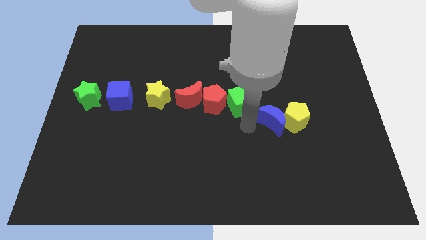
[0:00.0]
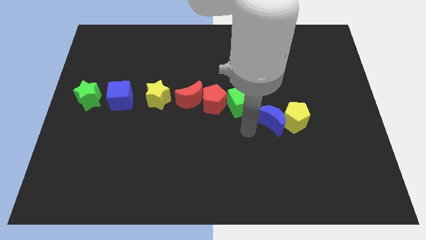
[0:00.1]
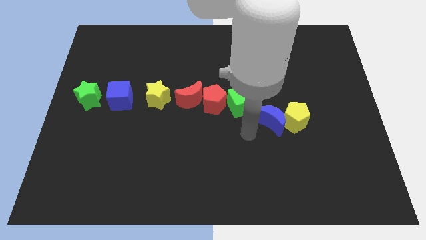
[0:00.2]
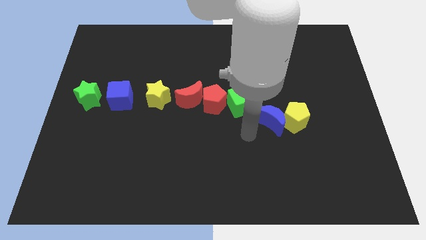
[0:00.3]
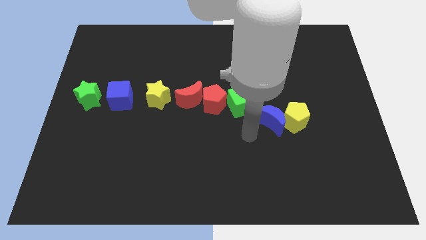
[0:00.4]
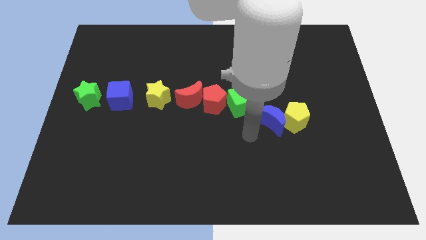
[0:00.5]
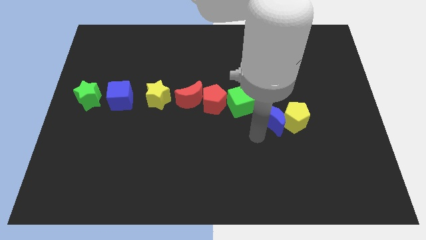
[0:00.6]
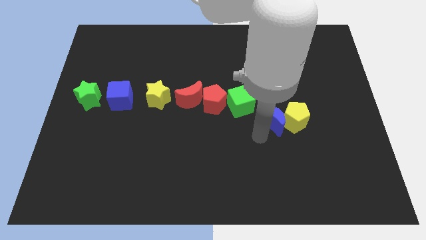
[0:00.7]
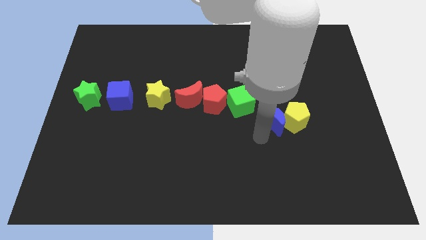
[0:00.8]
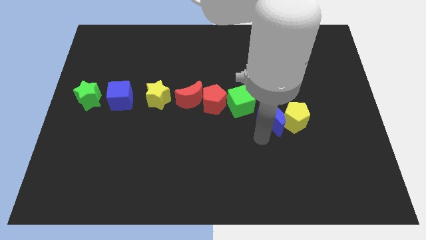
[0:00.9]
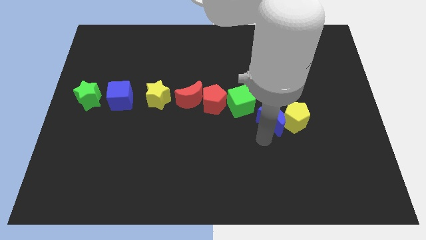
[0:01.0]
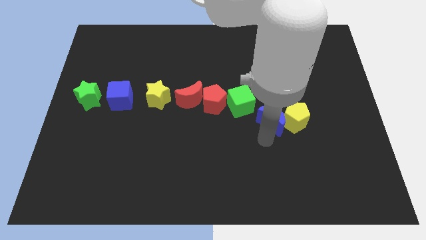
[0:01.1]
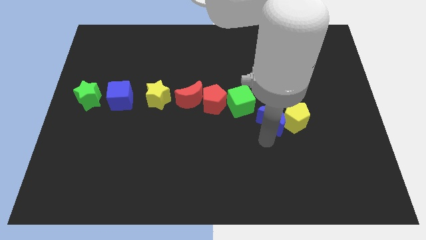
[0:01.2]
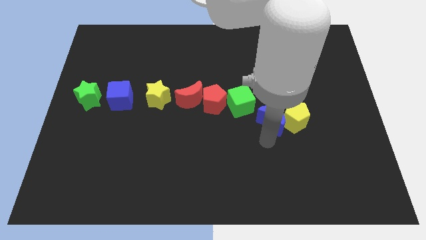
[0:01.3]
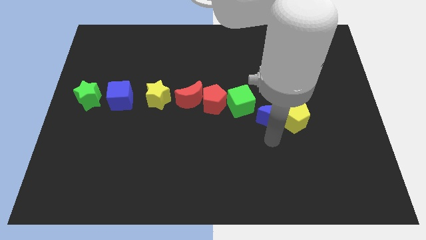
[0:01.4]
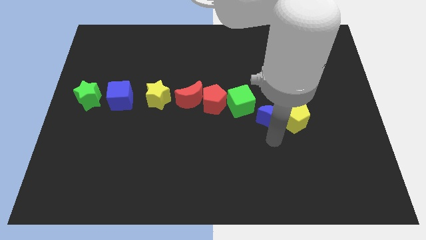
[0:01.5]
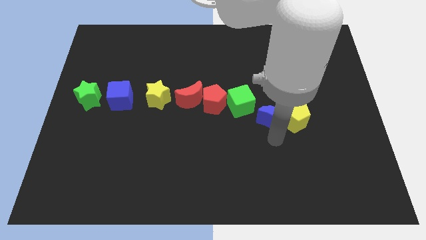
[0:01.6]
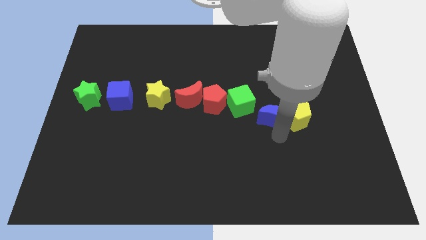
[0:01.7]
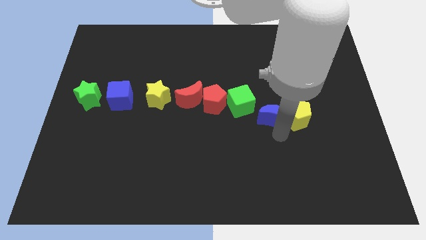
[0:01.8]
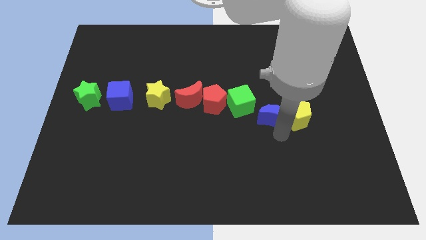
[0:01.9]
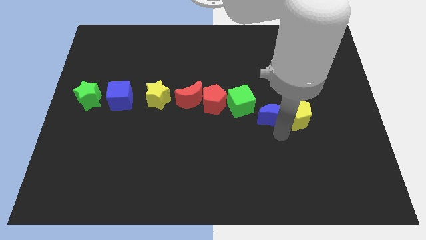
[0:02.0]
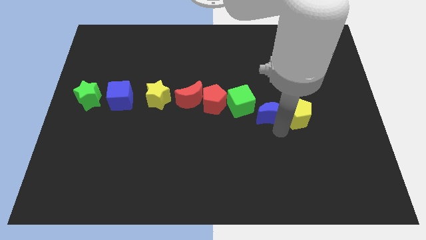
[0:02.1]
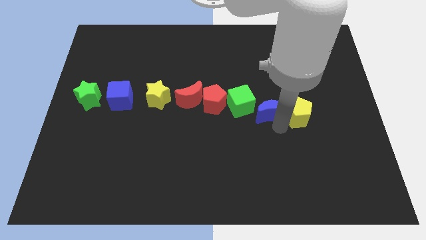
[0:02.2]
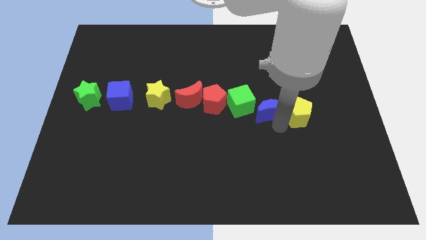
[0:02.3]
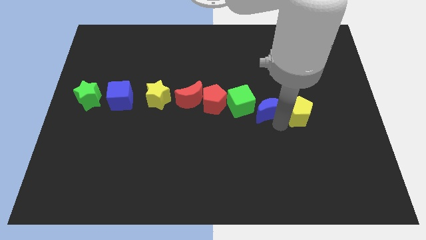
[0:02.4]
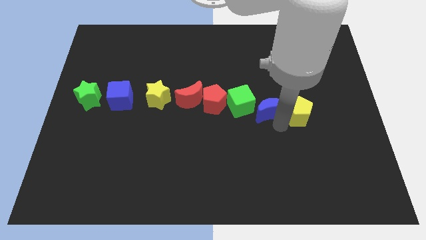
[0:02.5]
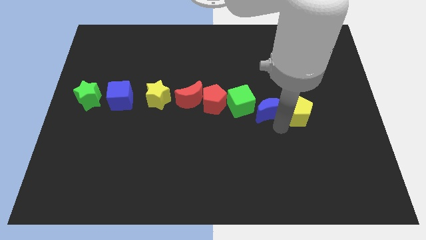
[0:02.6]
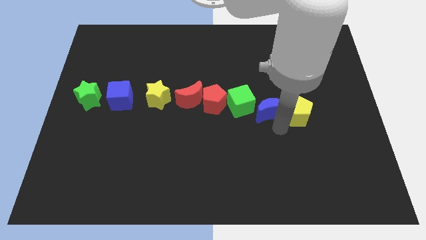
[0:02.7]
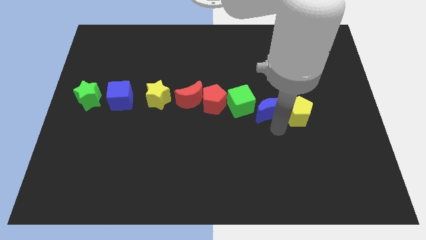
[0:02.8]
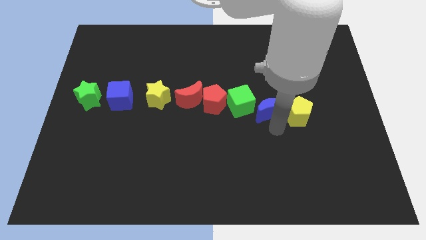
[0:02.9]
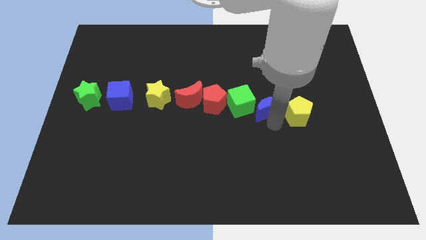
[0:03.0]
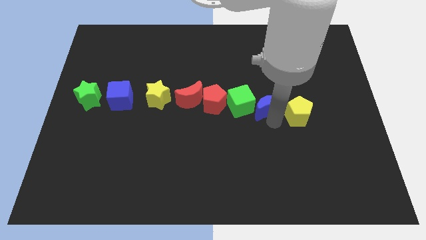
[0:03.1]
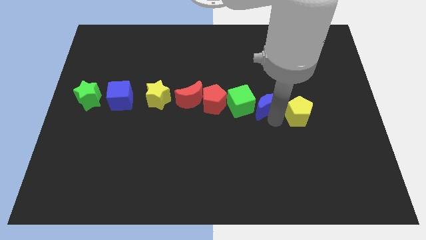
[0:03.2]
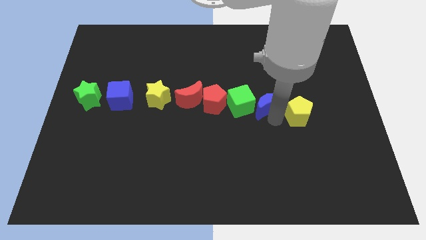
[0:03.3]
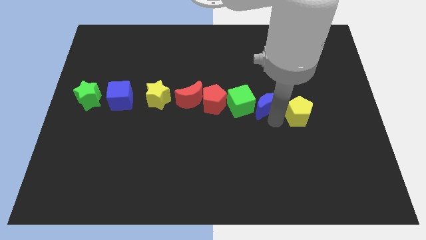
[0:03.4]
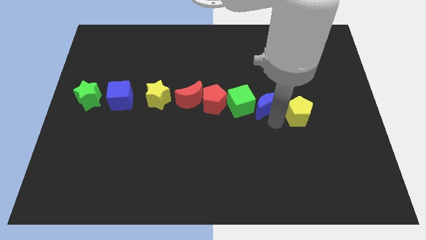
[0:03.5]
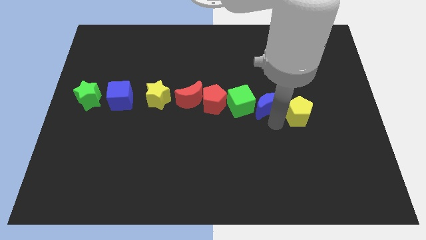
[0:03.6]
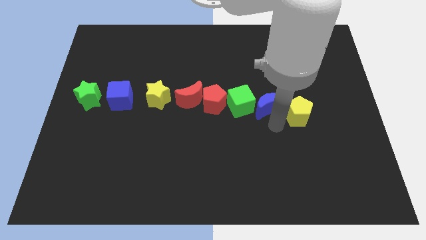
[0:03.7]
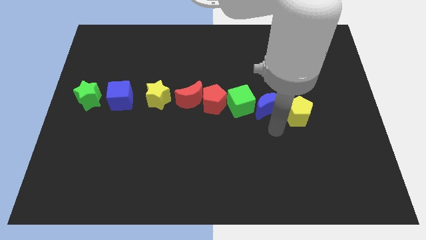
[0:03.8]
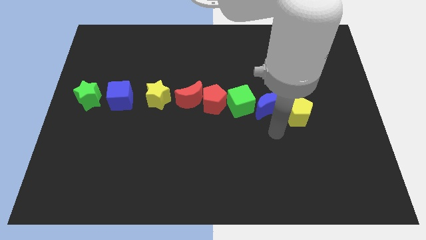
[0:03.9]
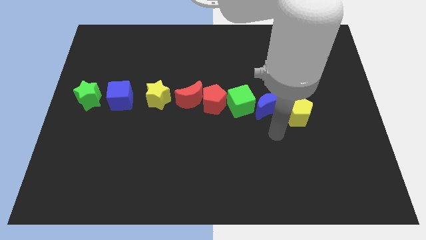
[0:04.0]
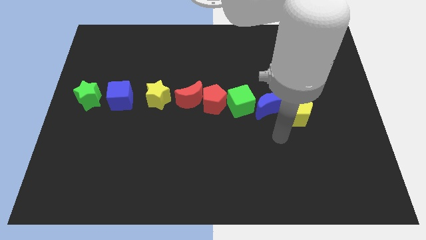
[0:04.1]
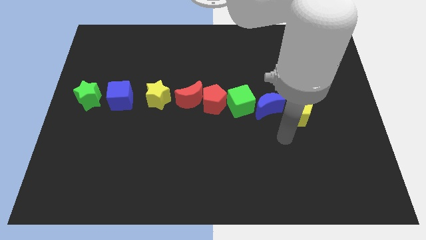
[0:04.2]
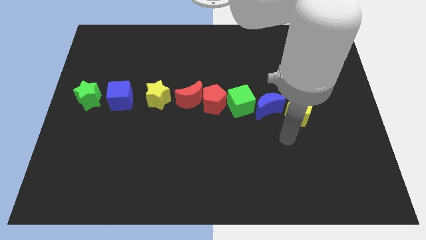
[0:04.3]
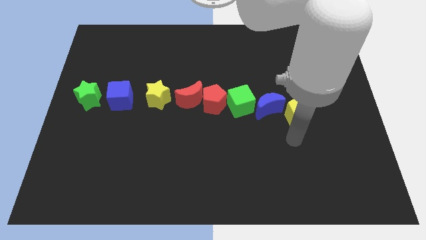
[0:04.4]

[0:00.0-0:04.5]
adjust the blue moon to the right of the green cube

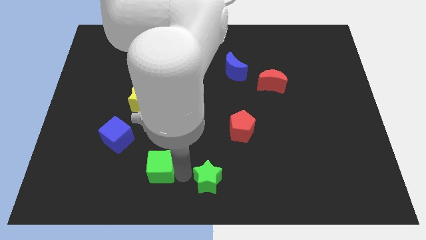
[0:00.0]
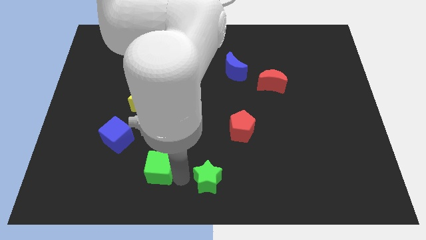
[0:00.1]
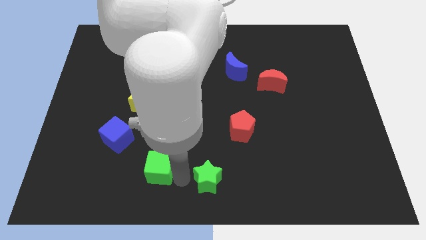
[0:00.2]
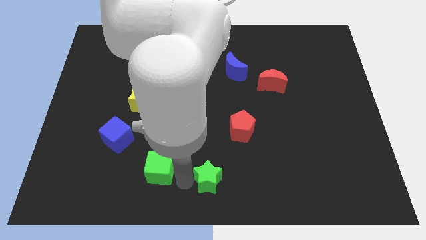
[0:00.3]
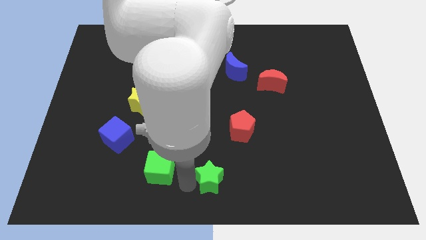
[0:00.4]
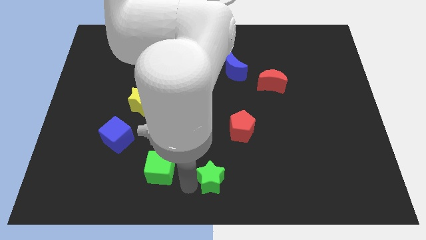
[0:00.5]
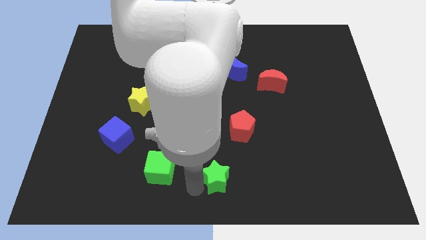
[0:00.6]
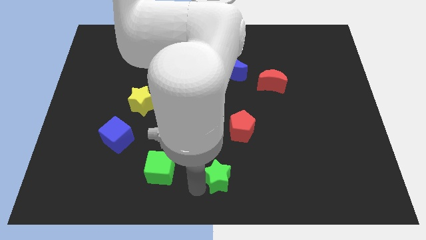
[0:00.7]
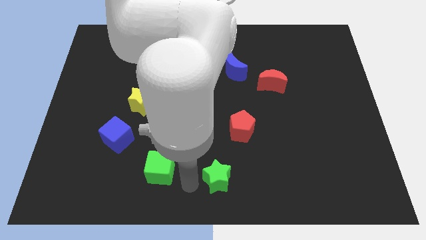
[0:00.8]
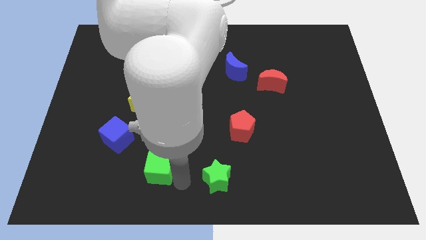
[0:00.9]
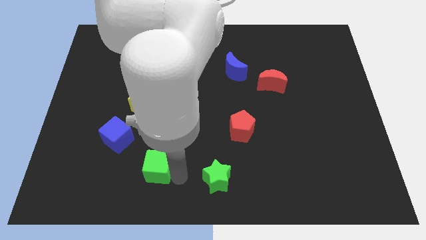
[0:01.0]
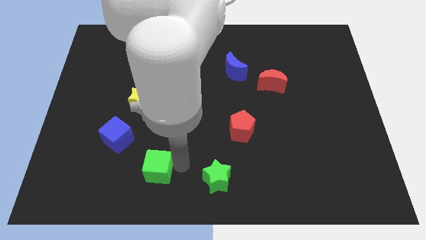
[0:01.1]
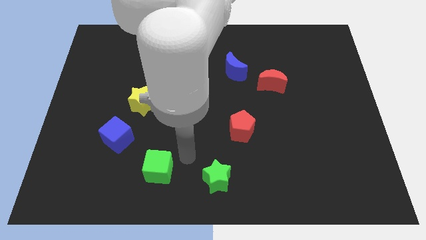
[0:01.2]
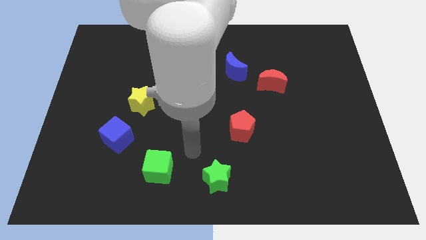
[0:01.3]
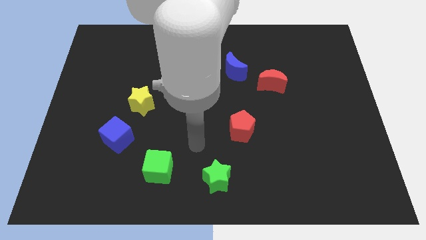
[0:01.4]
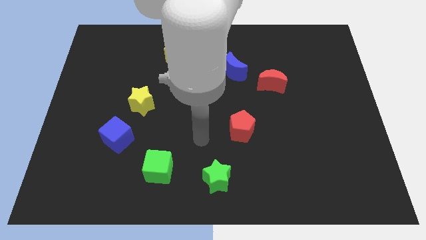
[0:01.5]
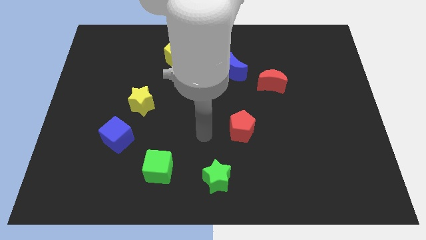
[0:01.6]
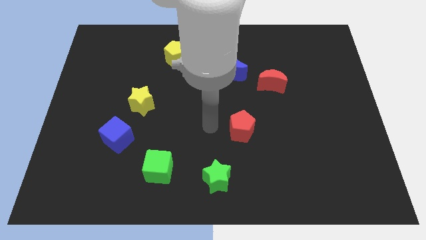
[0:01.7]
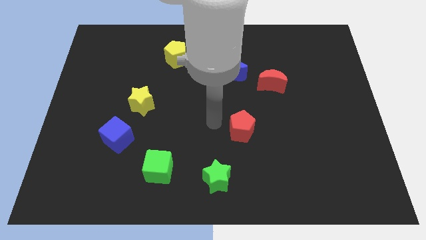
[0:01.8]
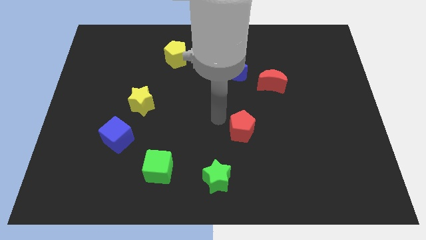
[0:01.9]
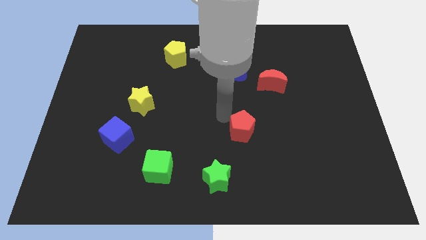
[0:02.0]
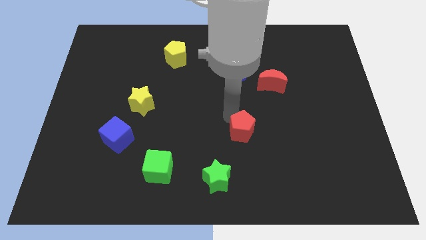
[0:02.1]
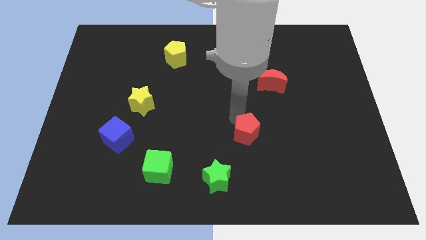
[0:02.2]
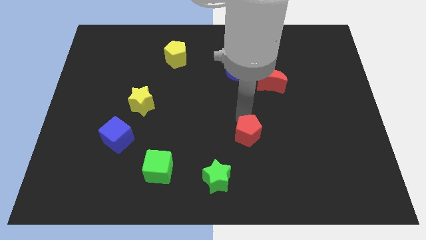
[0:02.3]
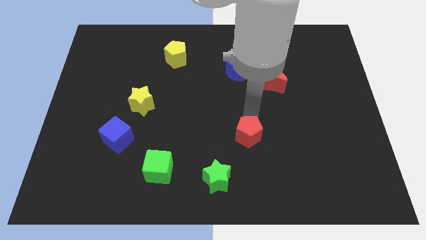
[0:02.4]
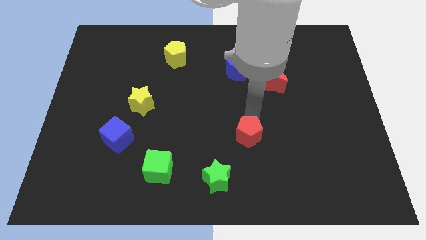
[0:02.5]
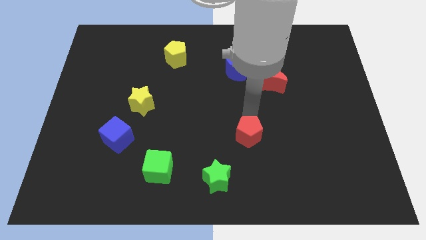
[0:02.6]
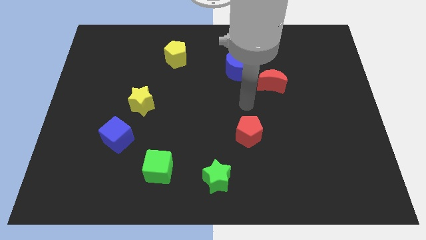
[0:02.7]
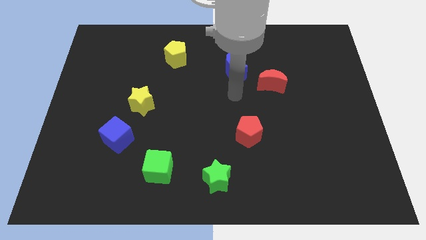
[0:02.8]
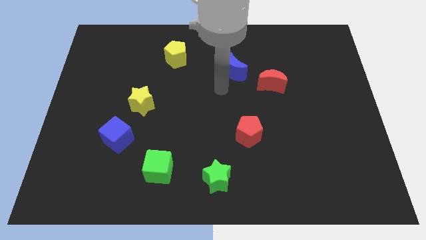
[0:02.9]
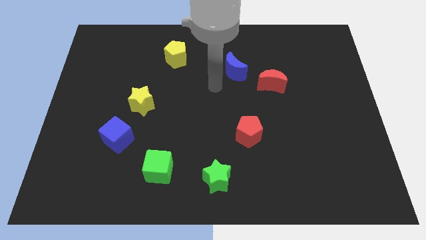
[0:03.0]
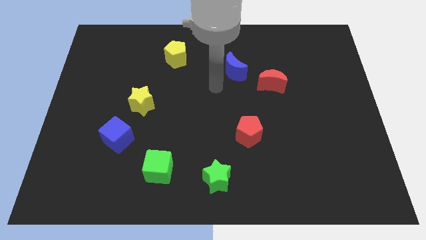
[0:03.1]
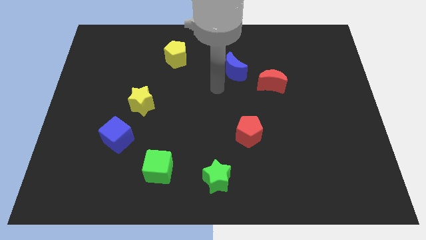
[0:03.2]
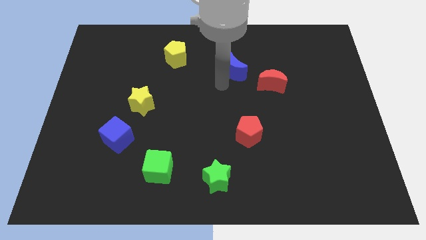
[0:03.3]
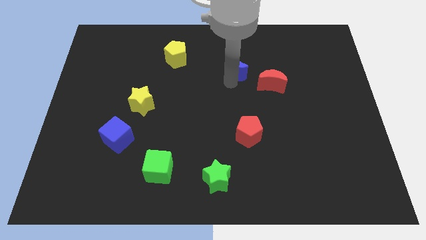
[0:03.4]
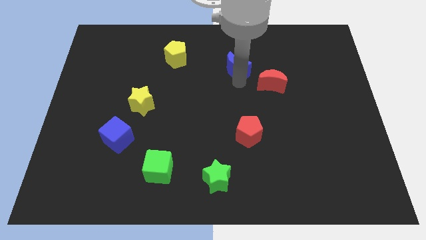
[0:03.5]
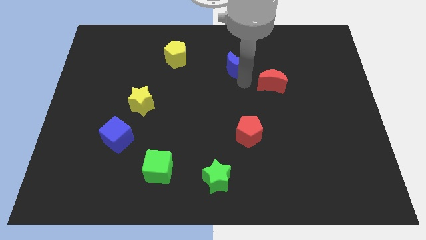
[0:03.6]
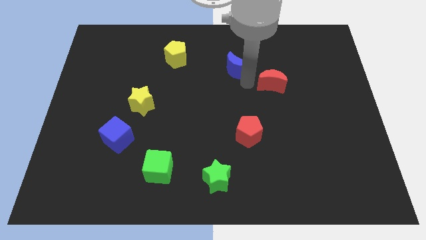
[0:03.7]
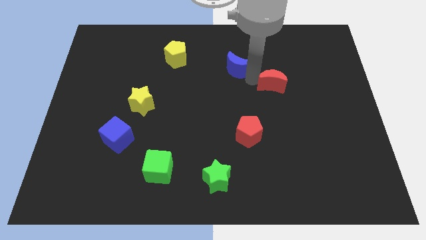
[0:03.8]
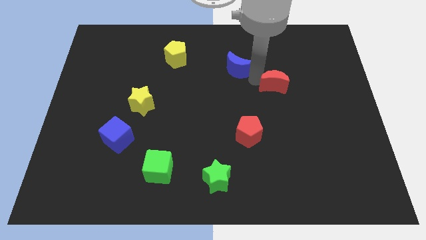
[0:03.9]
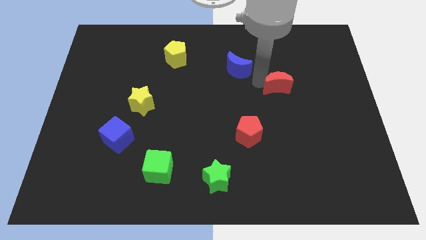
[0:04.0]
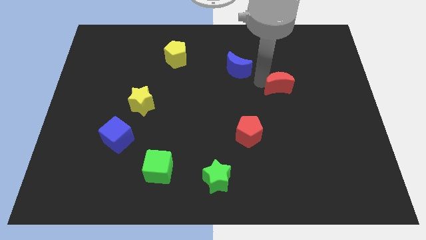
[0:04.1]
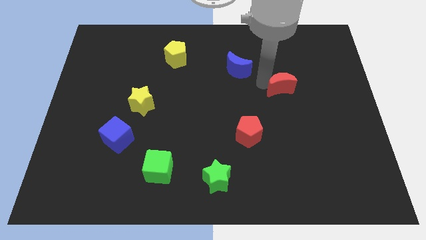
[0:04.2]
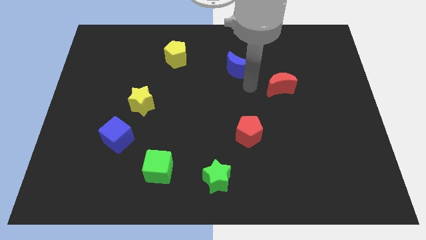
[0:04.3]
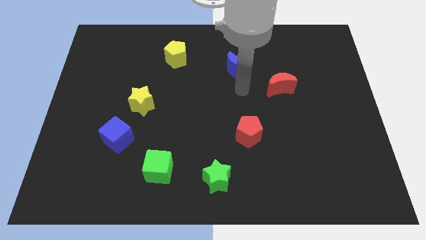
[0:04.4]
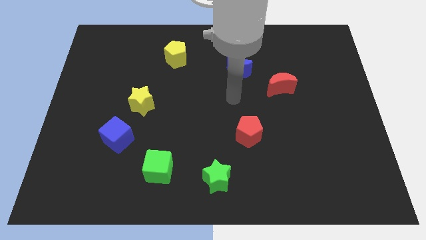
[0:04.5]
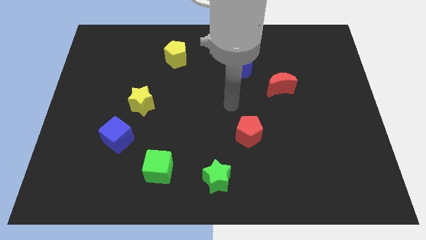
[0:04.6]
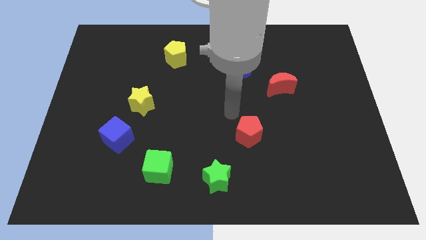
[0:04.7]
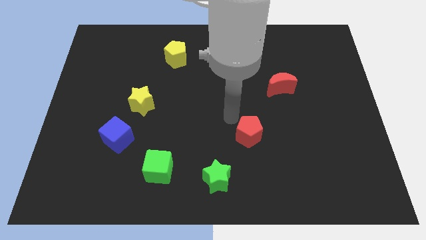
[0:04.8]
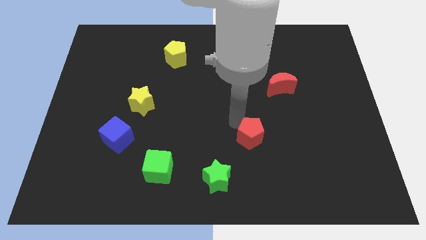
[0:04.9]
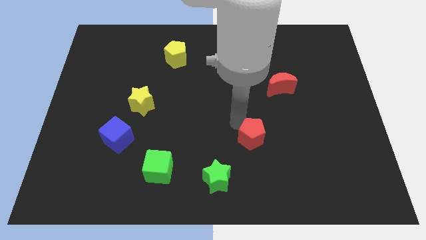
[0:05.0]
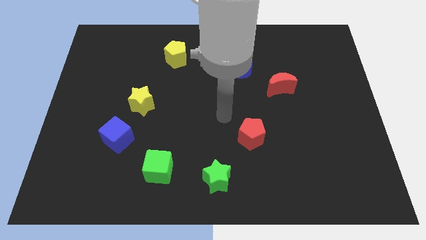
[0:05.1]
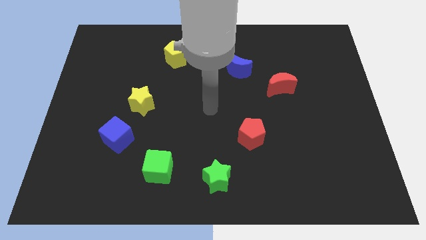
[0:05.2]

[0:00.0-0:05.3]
diagonally adjust the places of blocks
